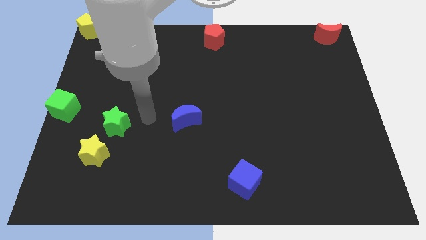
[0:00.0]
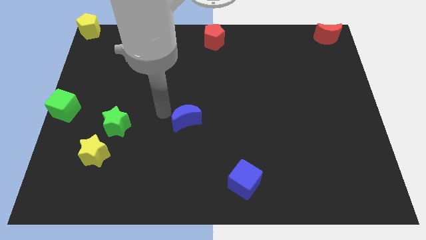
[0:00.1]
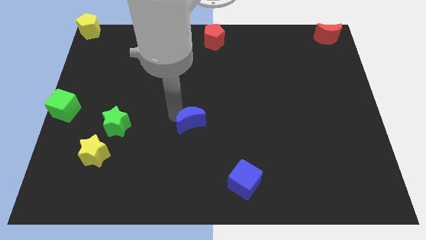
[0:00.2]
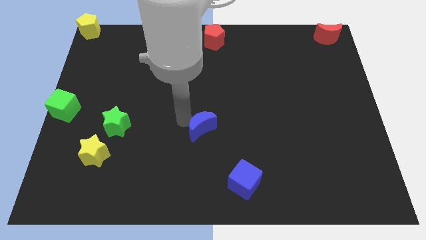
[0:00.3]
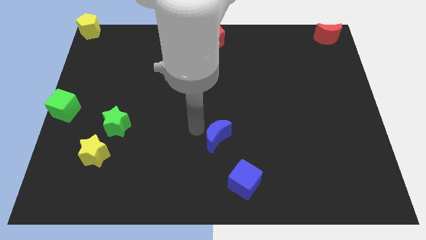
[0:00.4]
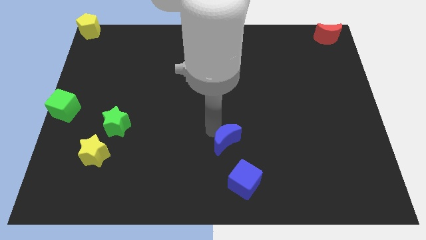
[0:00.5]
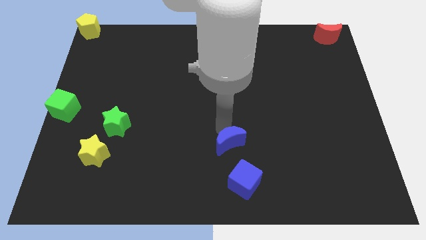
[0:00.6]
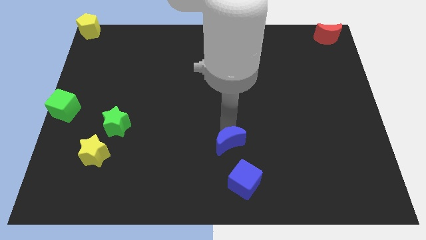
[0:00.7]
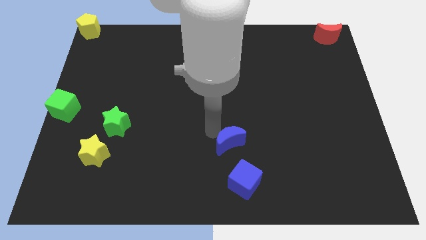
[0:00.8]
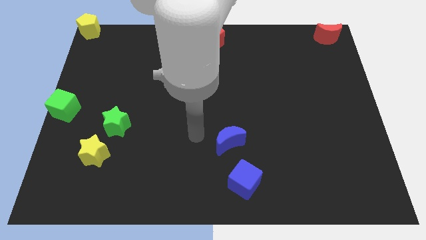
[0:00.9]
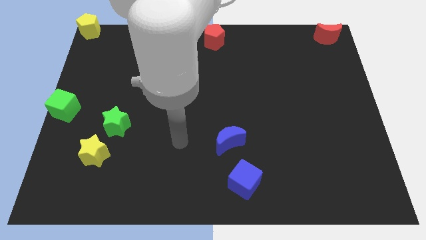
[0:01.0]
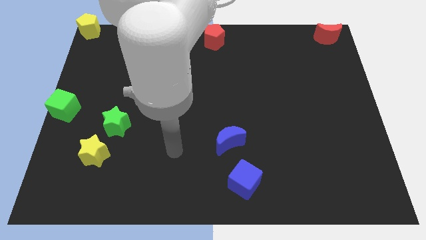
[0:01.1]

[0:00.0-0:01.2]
push the blue crescent towards the blue cube

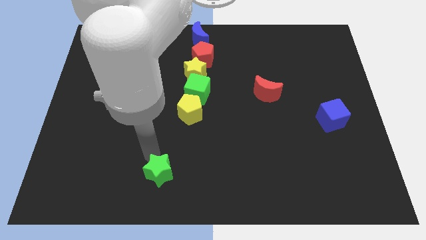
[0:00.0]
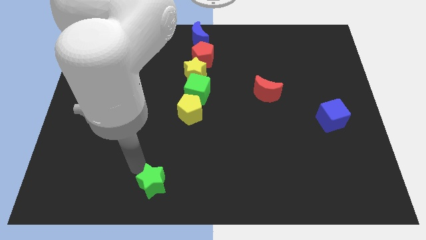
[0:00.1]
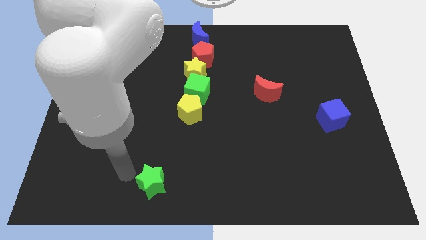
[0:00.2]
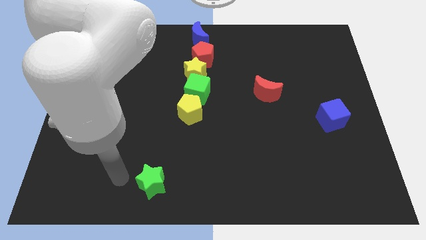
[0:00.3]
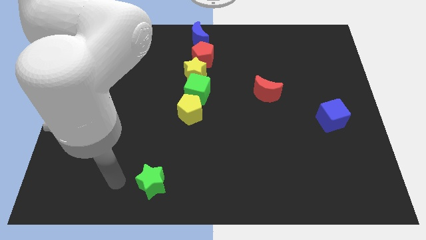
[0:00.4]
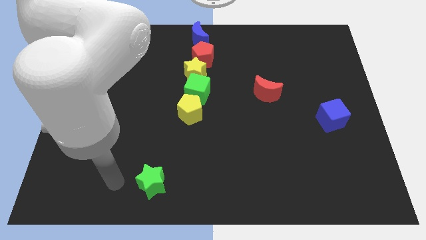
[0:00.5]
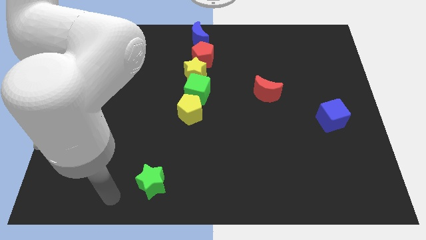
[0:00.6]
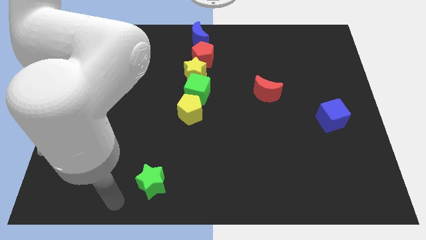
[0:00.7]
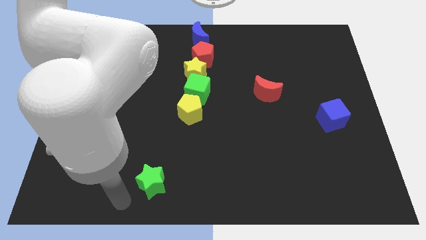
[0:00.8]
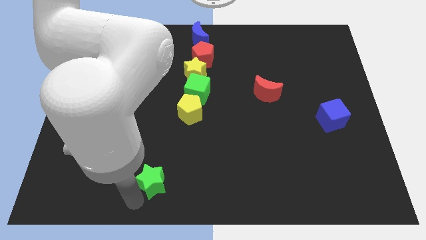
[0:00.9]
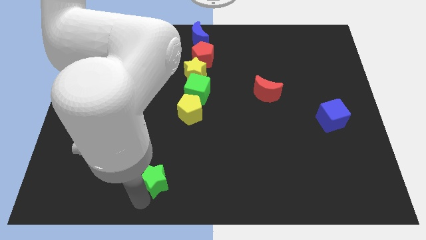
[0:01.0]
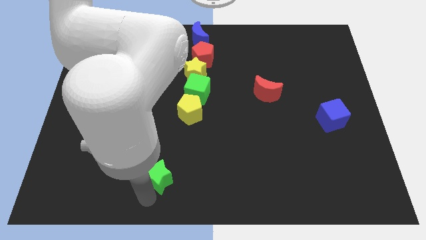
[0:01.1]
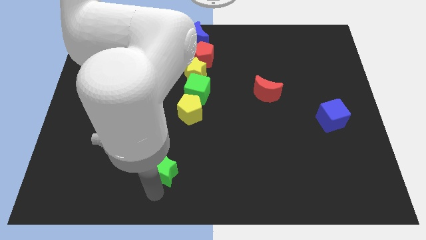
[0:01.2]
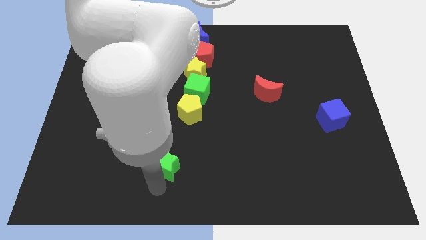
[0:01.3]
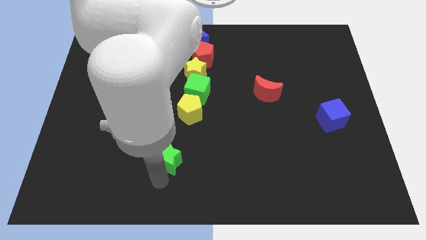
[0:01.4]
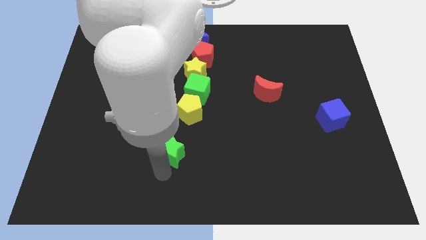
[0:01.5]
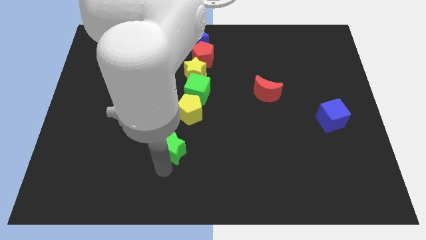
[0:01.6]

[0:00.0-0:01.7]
push the green star upward

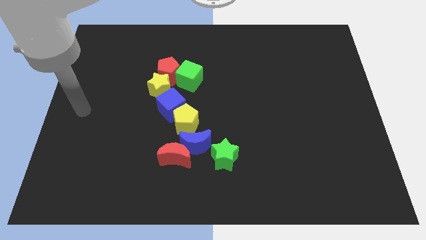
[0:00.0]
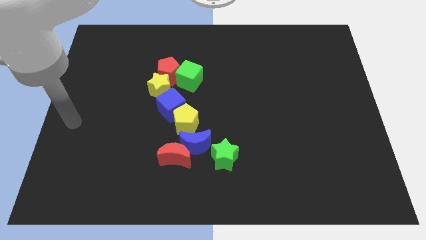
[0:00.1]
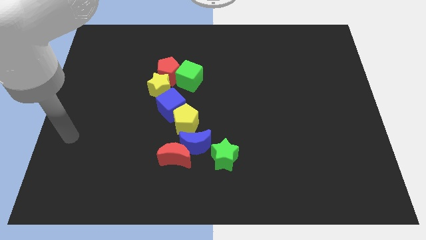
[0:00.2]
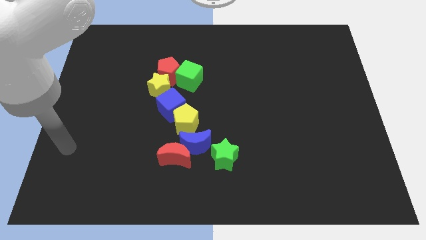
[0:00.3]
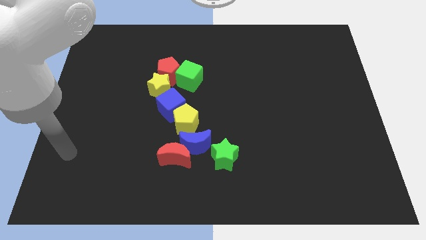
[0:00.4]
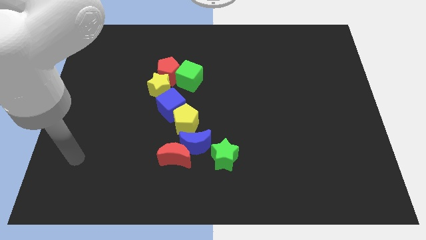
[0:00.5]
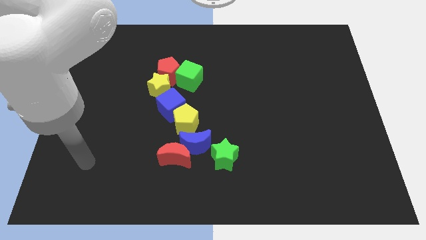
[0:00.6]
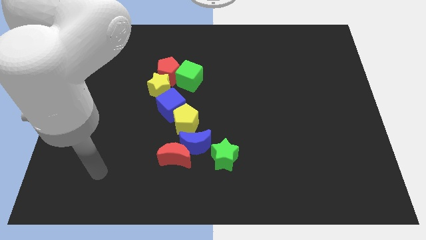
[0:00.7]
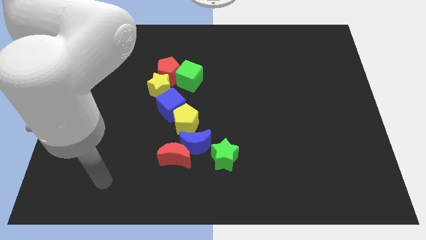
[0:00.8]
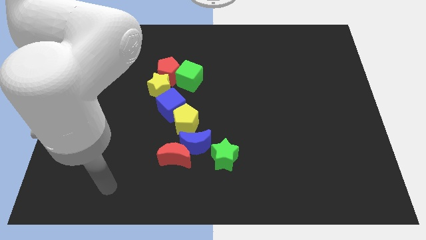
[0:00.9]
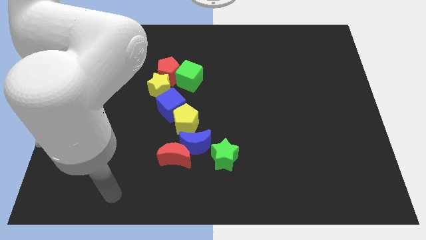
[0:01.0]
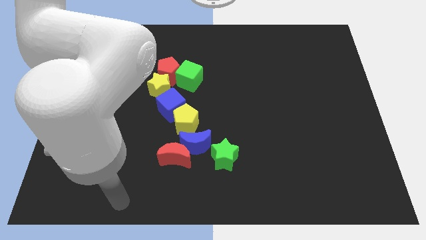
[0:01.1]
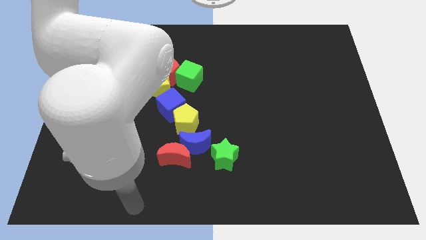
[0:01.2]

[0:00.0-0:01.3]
move your arm from left side to the bottom side

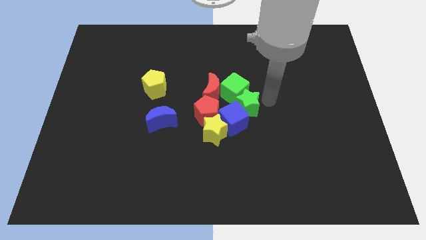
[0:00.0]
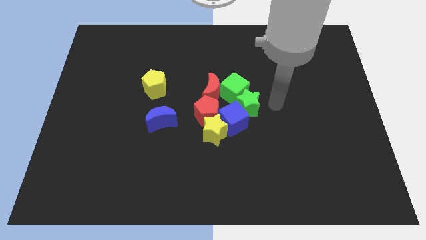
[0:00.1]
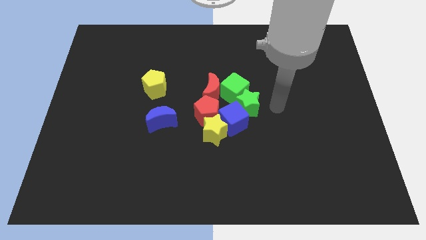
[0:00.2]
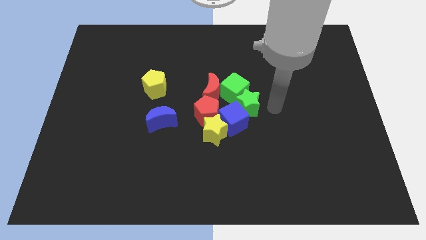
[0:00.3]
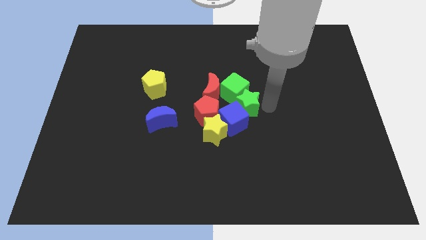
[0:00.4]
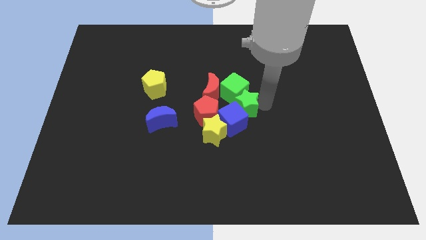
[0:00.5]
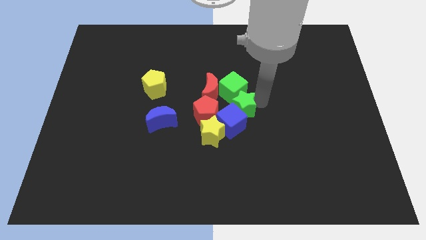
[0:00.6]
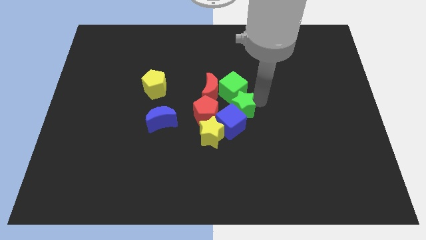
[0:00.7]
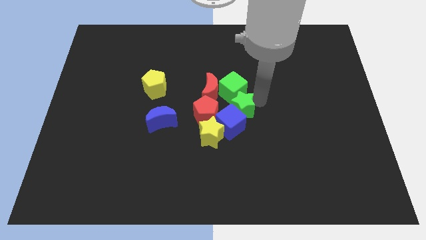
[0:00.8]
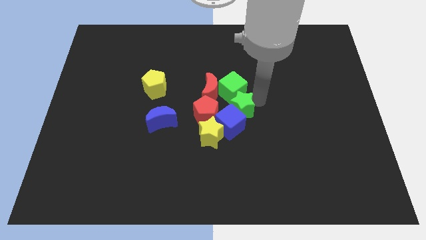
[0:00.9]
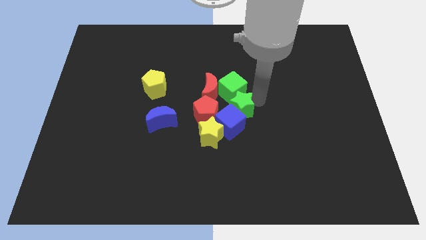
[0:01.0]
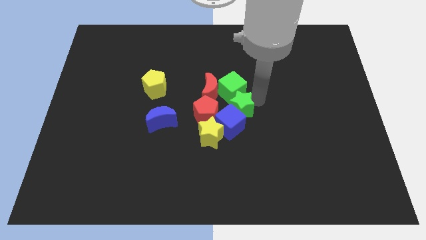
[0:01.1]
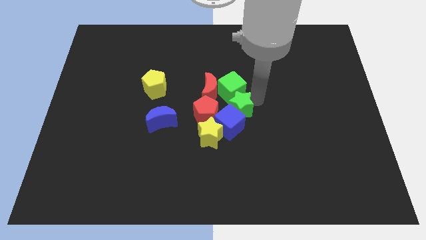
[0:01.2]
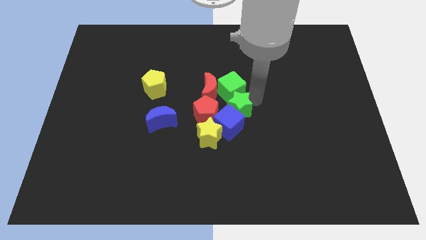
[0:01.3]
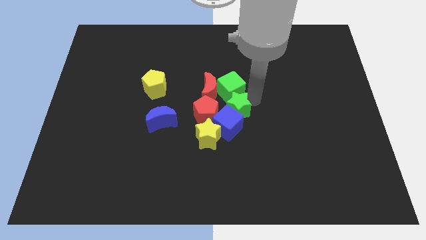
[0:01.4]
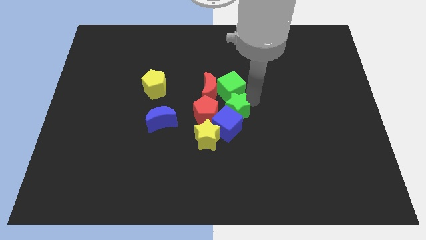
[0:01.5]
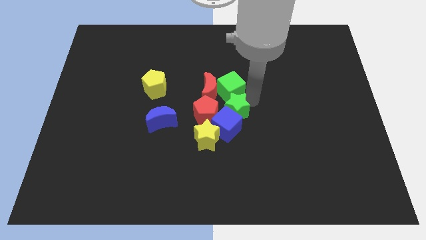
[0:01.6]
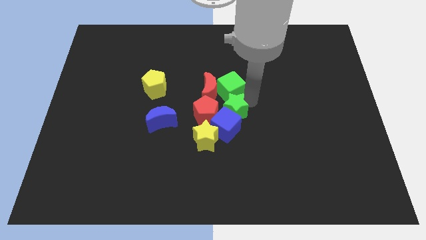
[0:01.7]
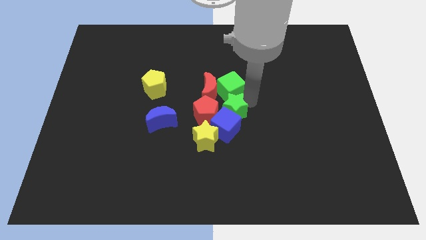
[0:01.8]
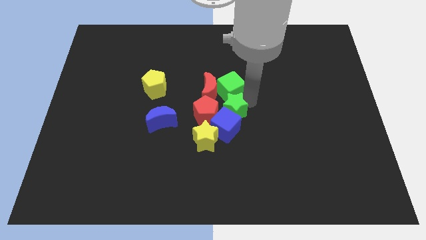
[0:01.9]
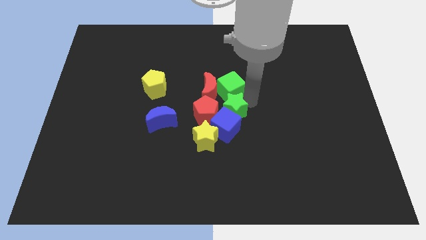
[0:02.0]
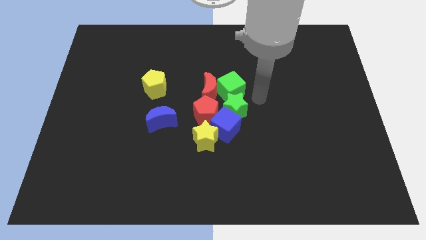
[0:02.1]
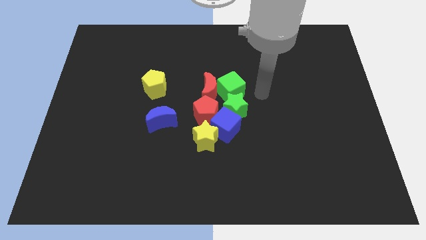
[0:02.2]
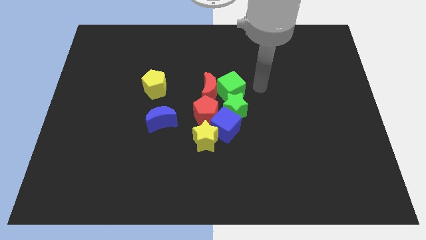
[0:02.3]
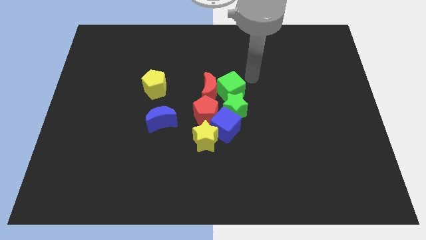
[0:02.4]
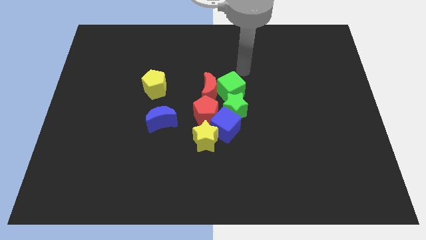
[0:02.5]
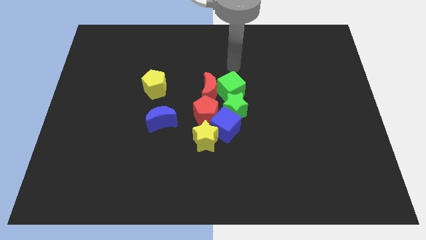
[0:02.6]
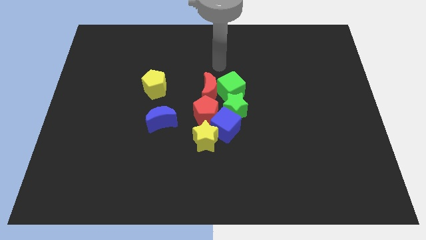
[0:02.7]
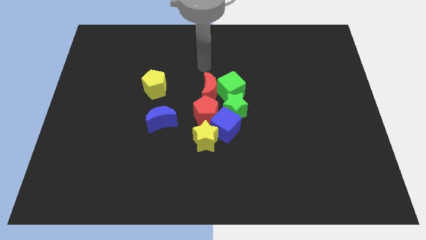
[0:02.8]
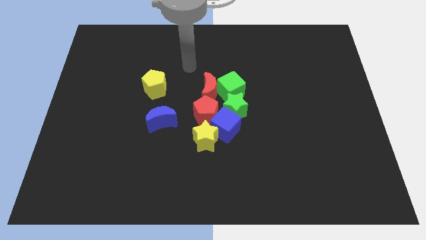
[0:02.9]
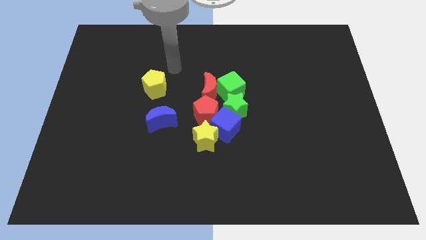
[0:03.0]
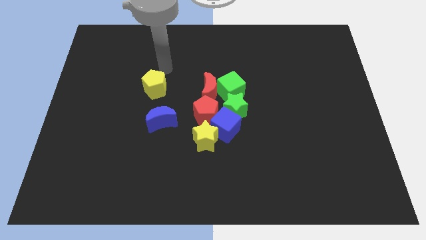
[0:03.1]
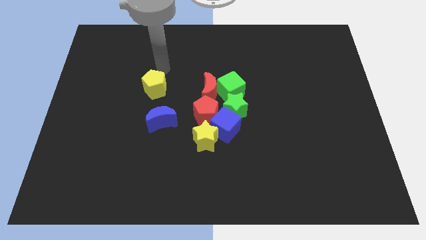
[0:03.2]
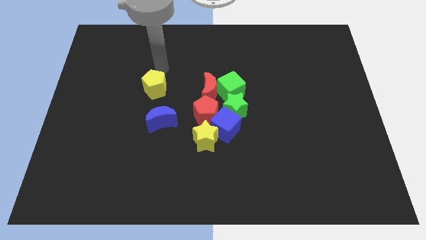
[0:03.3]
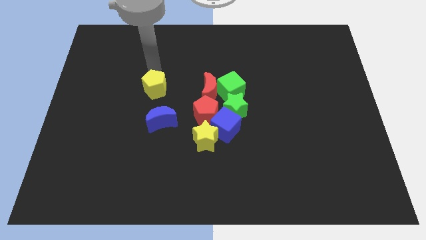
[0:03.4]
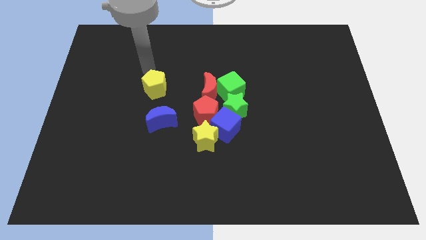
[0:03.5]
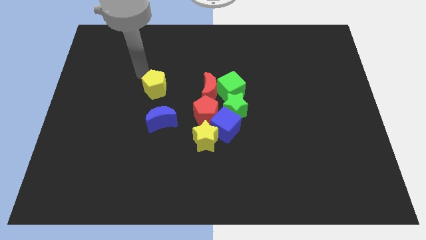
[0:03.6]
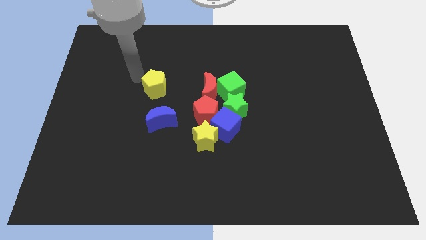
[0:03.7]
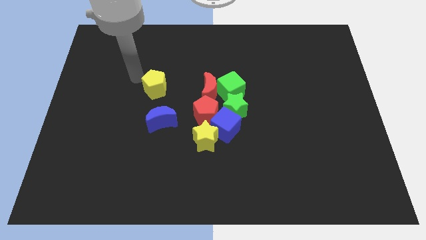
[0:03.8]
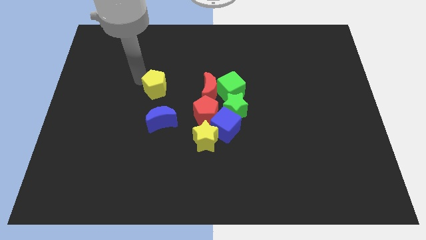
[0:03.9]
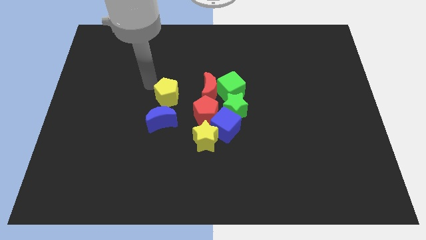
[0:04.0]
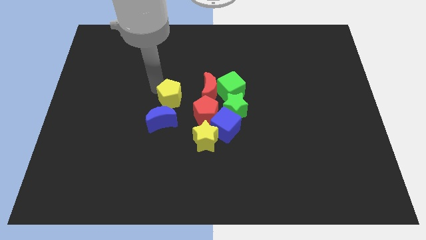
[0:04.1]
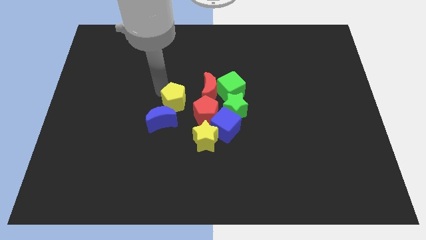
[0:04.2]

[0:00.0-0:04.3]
slide the yellow pentagon towards the red pentagon

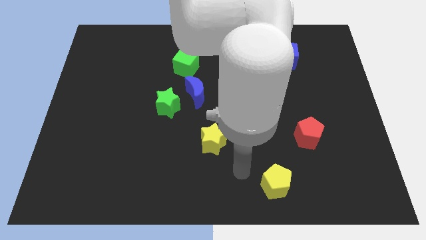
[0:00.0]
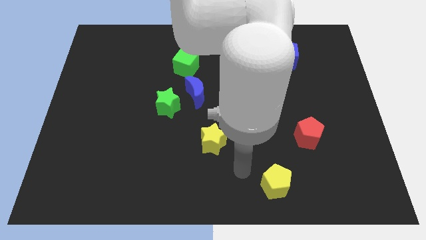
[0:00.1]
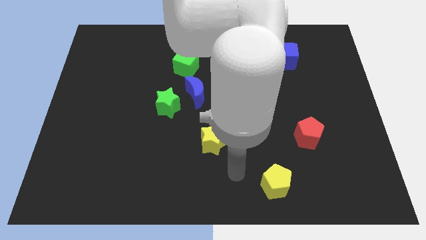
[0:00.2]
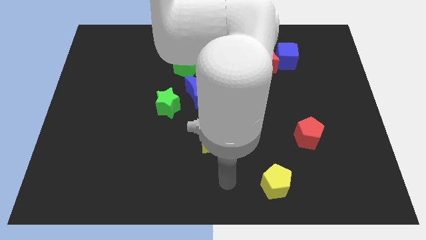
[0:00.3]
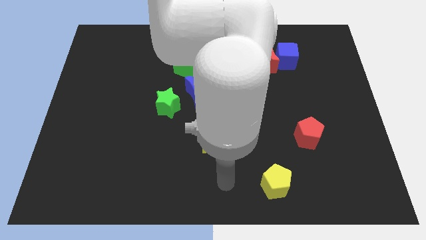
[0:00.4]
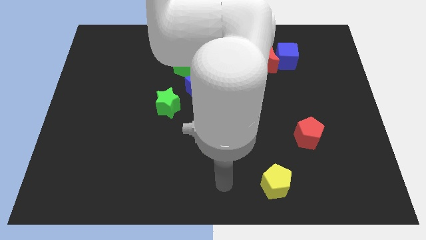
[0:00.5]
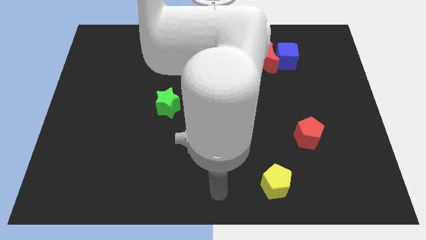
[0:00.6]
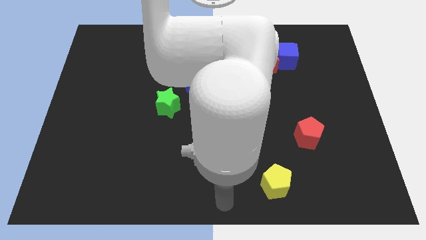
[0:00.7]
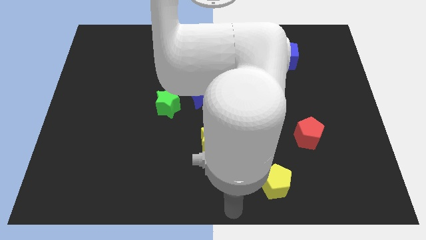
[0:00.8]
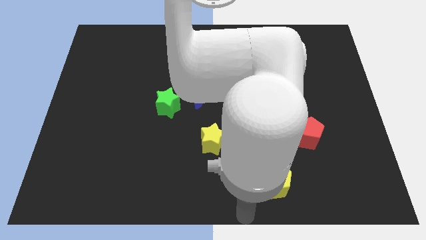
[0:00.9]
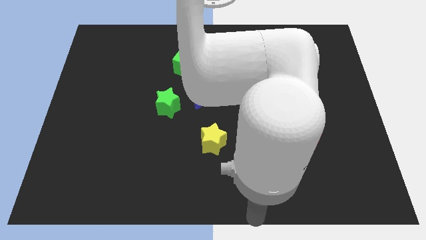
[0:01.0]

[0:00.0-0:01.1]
point your arm towards the bottom side of the yellow pentagon
